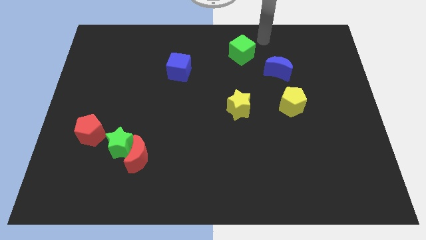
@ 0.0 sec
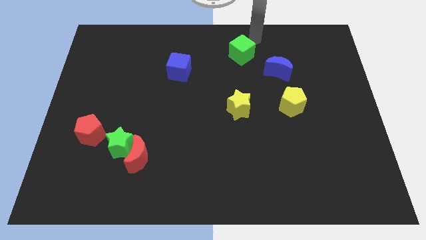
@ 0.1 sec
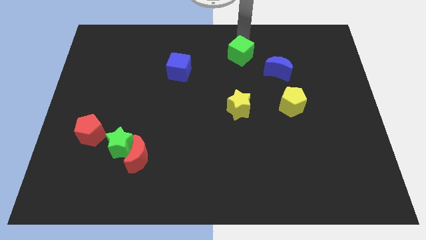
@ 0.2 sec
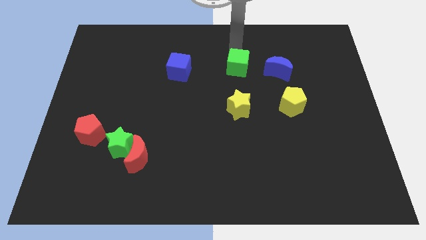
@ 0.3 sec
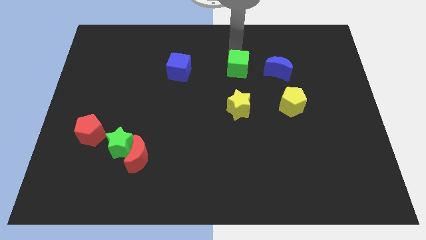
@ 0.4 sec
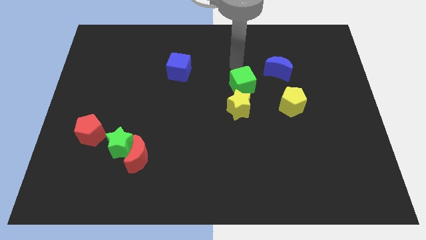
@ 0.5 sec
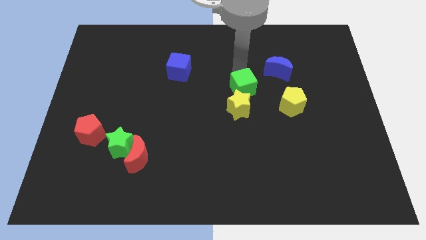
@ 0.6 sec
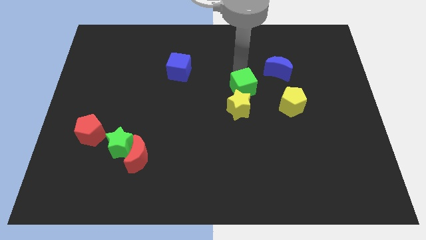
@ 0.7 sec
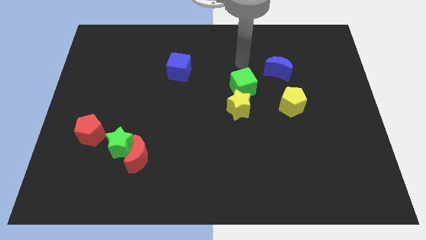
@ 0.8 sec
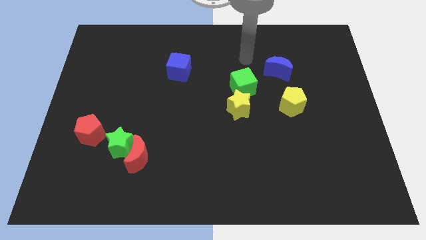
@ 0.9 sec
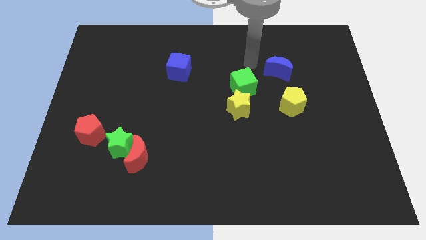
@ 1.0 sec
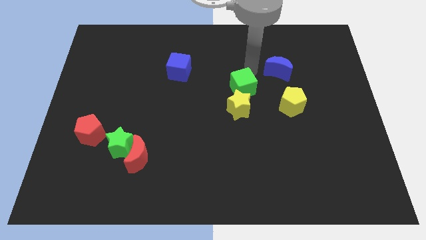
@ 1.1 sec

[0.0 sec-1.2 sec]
move the green cube towards the top side of the green star

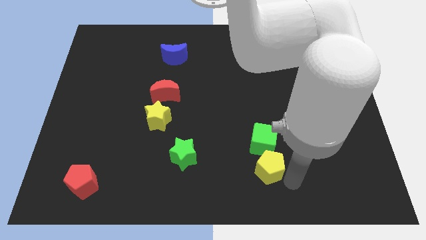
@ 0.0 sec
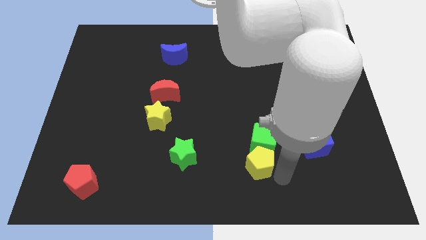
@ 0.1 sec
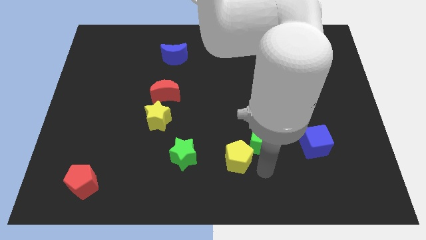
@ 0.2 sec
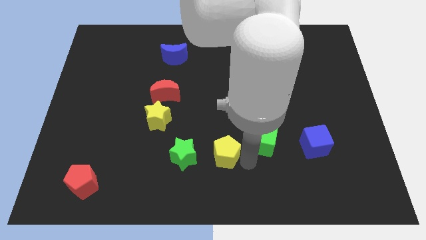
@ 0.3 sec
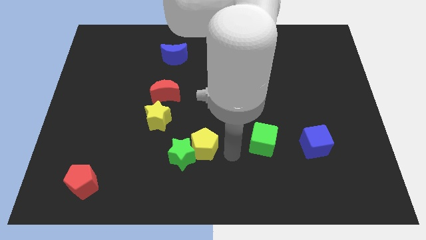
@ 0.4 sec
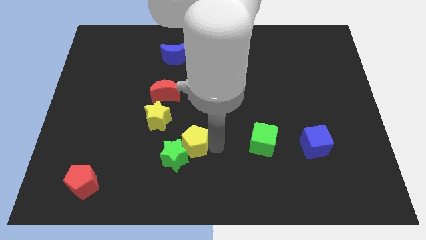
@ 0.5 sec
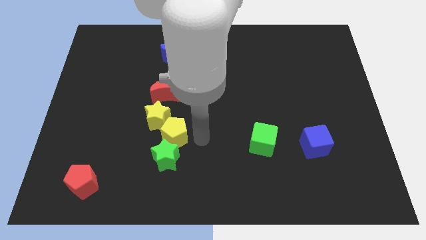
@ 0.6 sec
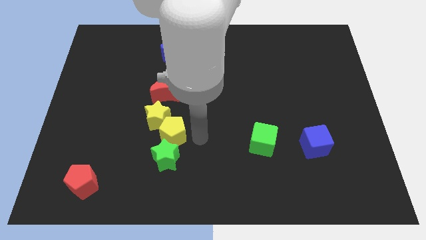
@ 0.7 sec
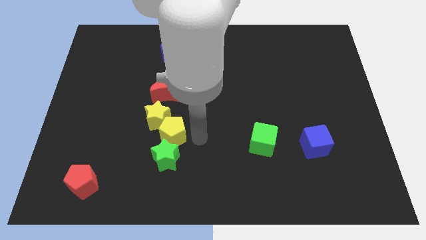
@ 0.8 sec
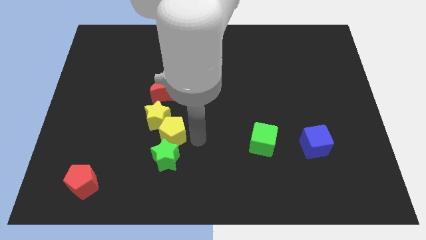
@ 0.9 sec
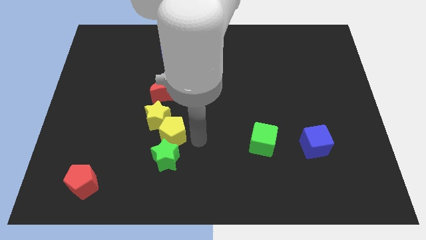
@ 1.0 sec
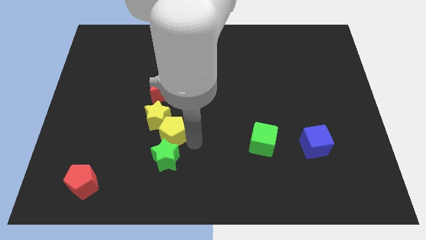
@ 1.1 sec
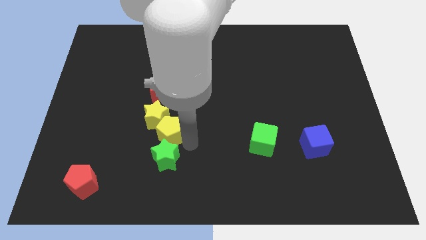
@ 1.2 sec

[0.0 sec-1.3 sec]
push the yellow pentagon into yellow star

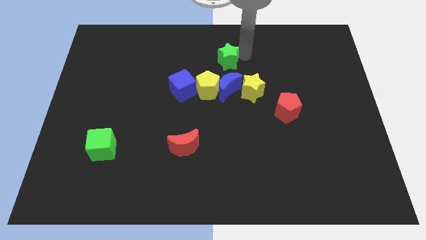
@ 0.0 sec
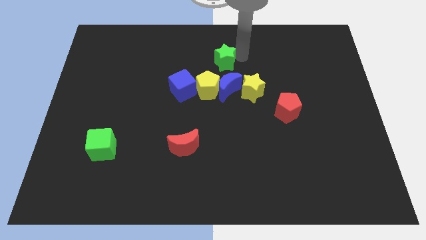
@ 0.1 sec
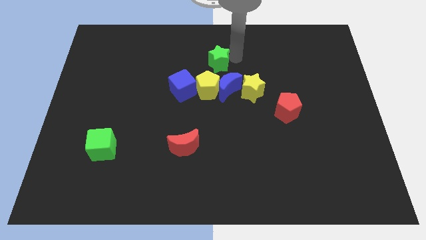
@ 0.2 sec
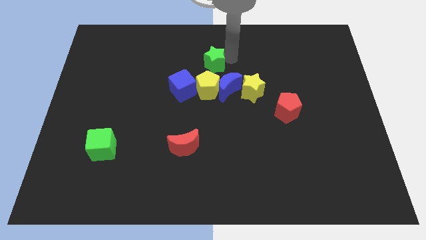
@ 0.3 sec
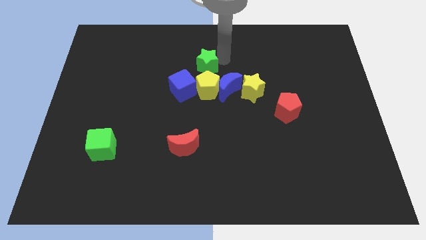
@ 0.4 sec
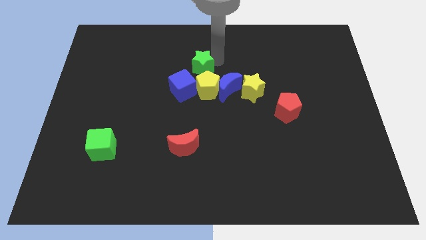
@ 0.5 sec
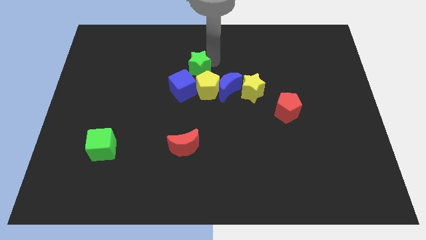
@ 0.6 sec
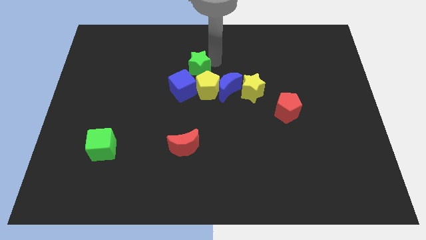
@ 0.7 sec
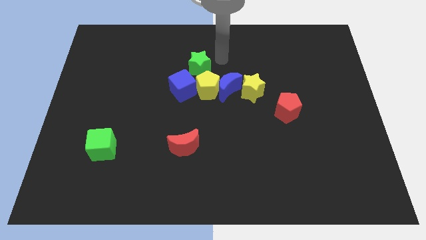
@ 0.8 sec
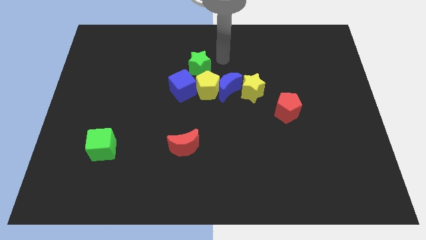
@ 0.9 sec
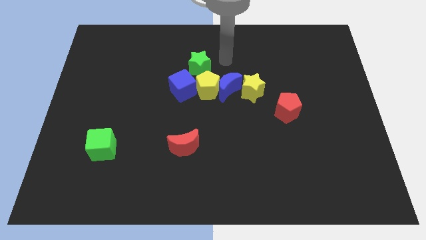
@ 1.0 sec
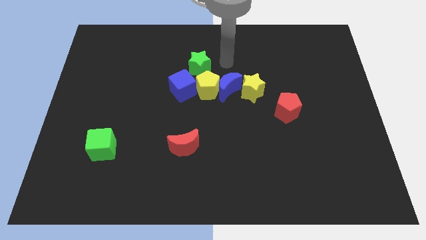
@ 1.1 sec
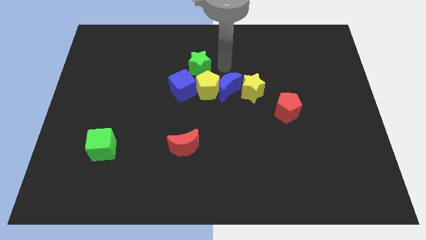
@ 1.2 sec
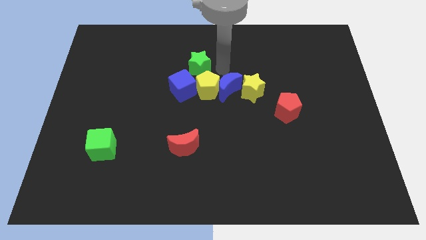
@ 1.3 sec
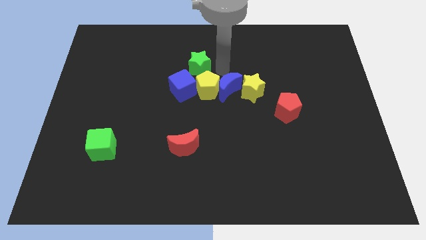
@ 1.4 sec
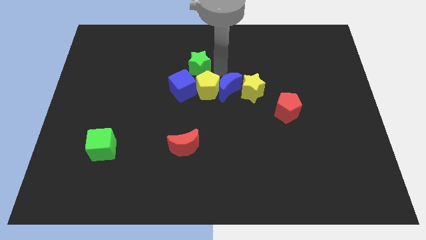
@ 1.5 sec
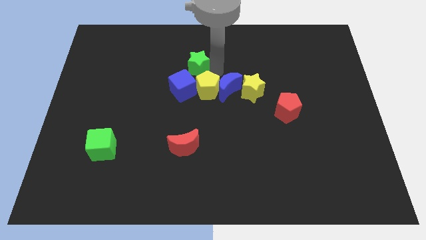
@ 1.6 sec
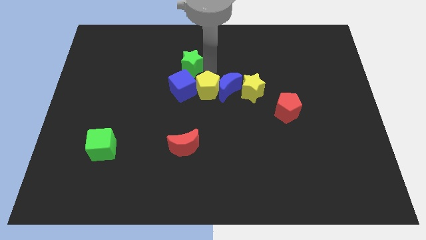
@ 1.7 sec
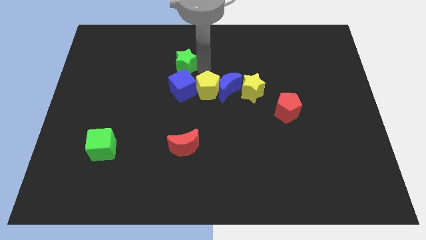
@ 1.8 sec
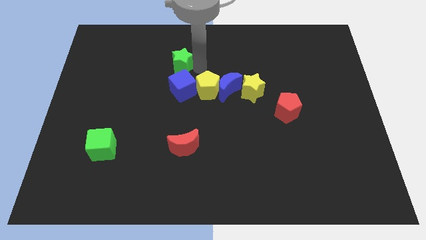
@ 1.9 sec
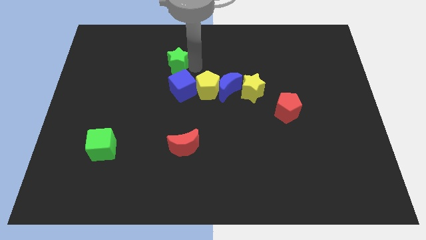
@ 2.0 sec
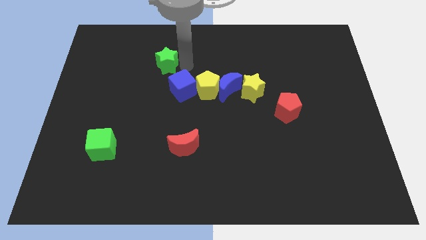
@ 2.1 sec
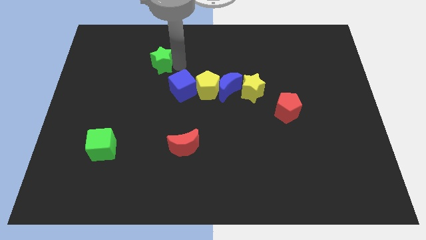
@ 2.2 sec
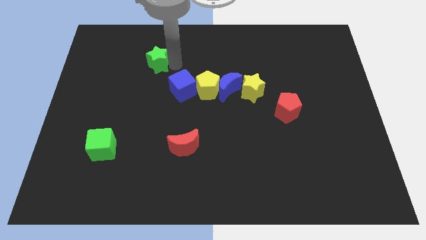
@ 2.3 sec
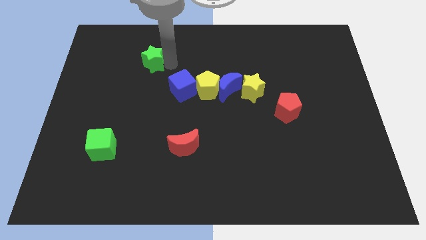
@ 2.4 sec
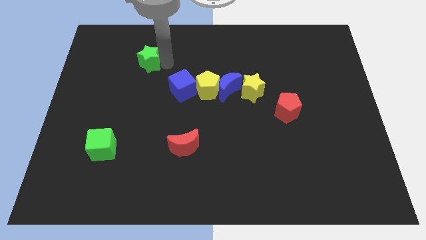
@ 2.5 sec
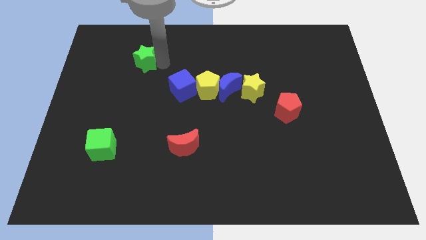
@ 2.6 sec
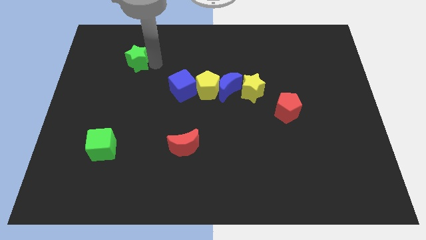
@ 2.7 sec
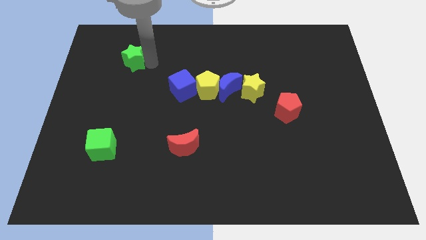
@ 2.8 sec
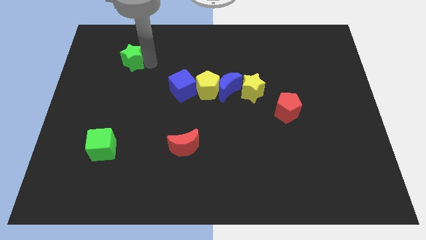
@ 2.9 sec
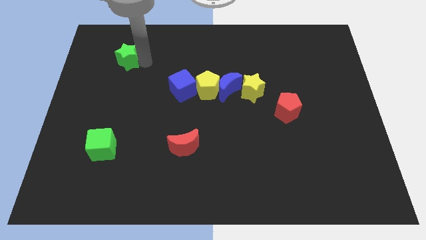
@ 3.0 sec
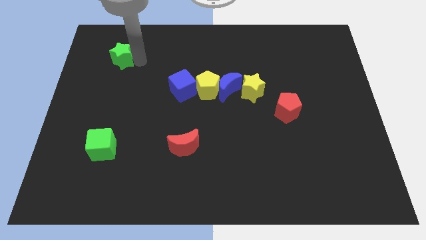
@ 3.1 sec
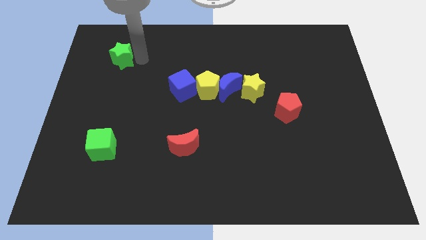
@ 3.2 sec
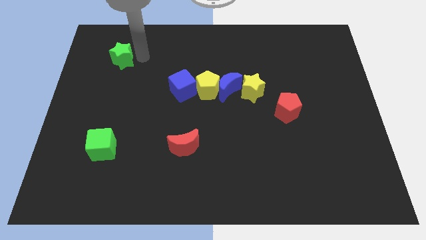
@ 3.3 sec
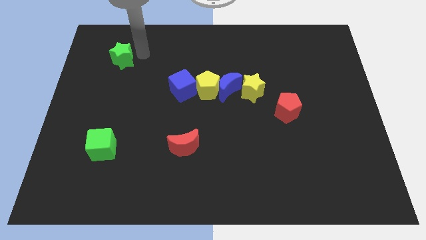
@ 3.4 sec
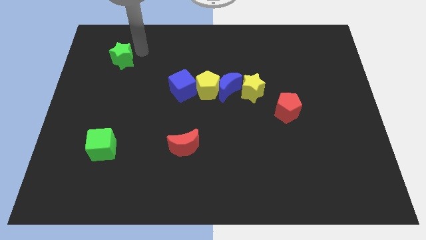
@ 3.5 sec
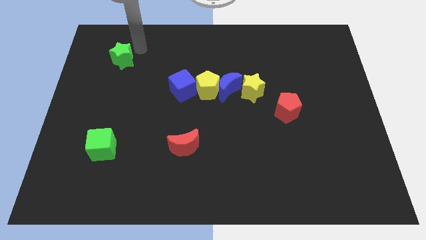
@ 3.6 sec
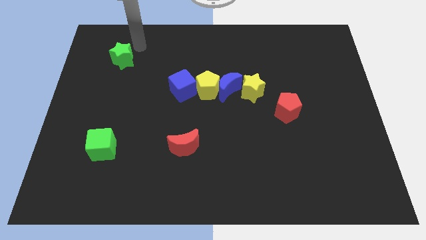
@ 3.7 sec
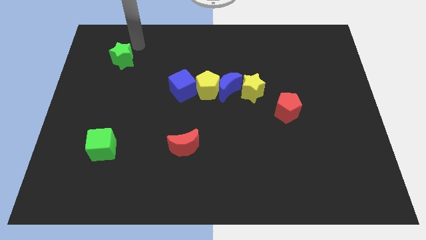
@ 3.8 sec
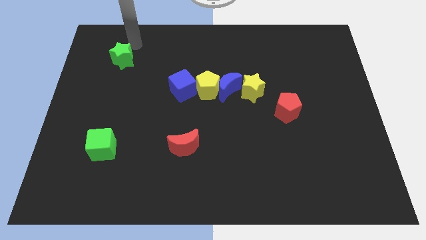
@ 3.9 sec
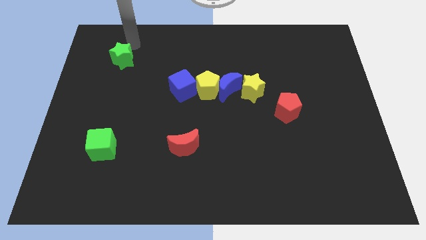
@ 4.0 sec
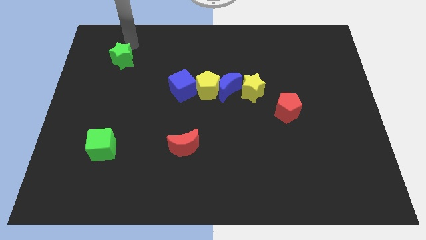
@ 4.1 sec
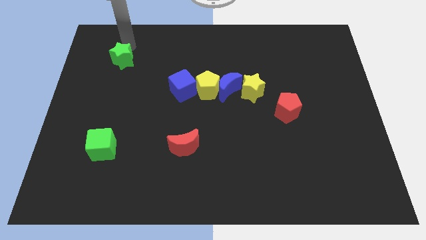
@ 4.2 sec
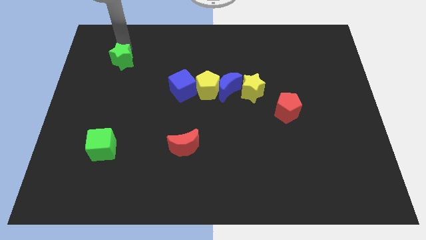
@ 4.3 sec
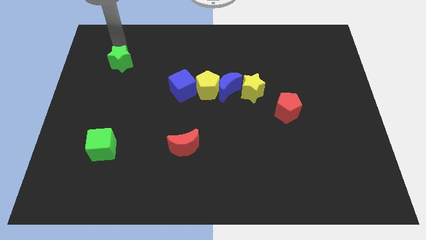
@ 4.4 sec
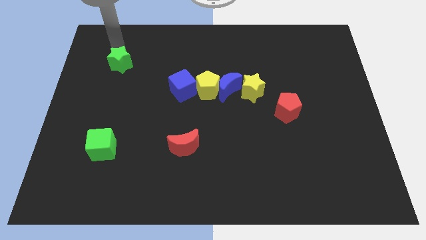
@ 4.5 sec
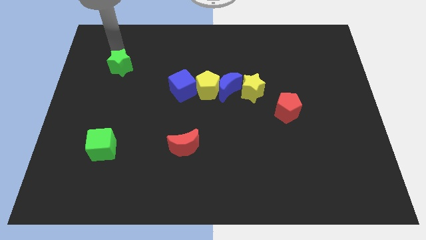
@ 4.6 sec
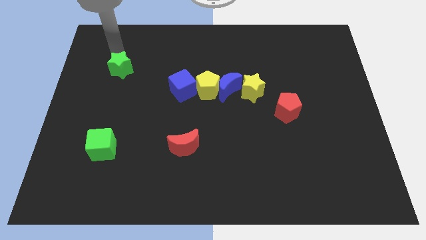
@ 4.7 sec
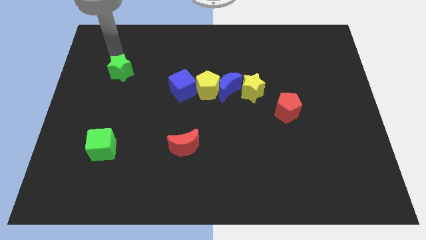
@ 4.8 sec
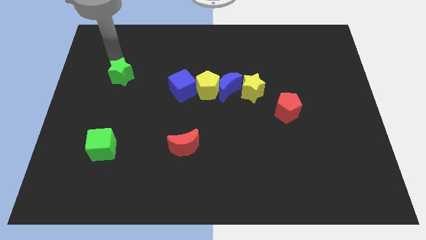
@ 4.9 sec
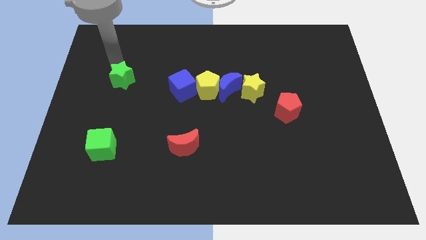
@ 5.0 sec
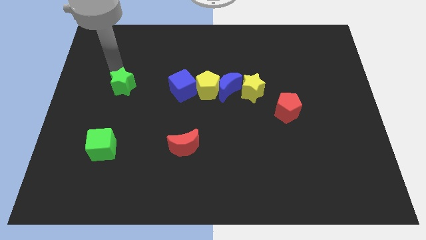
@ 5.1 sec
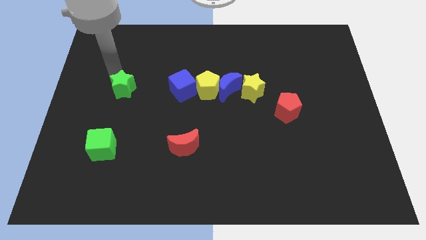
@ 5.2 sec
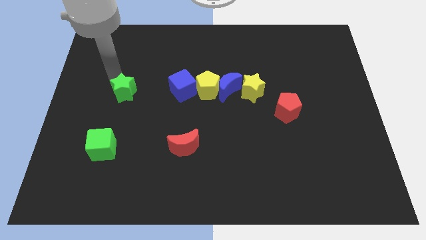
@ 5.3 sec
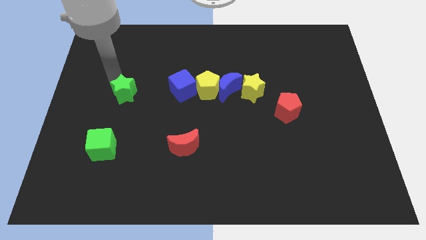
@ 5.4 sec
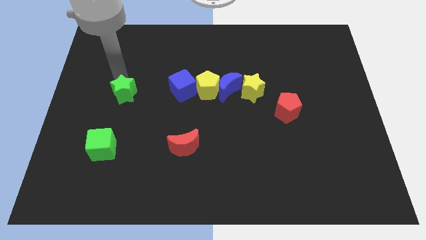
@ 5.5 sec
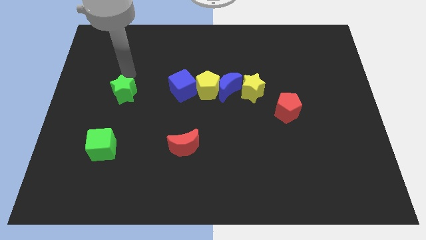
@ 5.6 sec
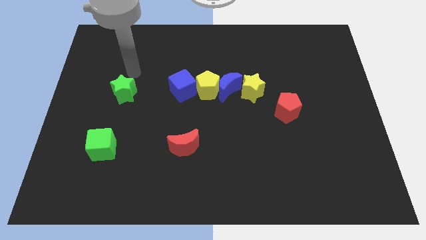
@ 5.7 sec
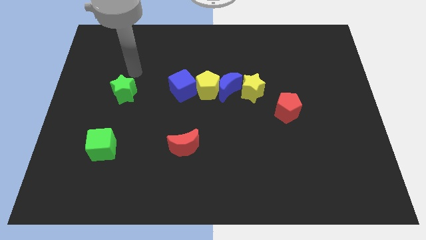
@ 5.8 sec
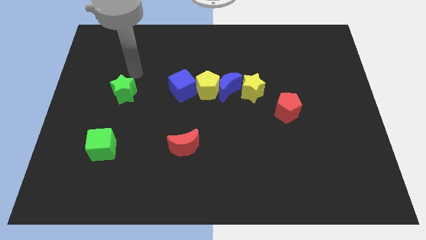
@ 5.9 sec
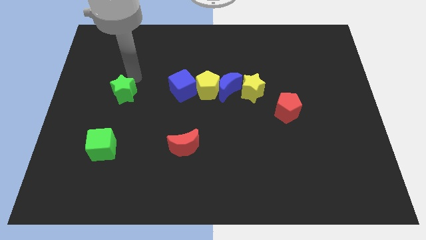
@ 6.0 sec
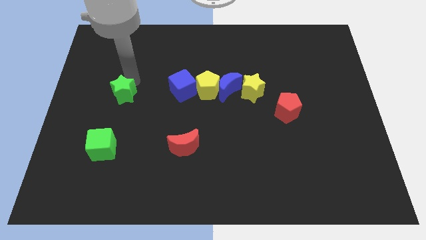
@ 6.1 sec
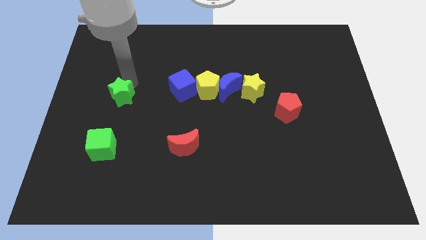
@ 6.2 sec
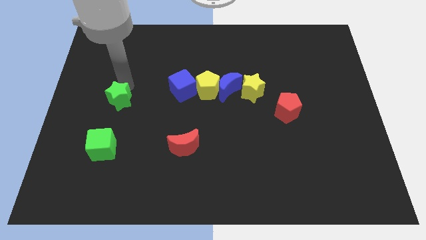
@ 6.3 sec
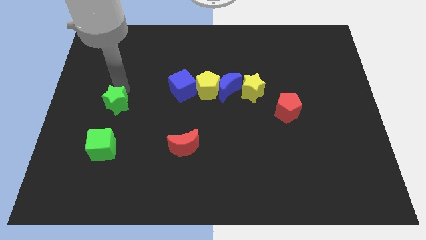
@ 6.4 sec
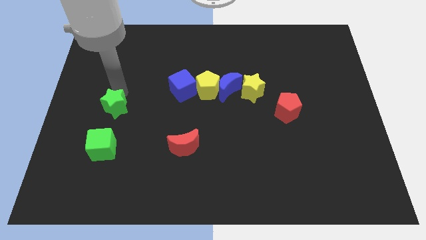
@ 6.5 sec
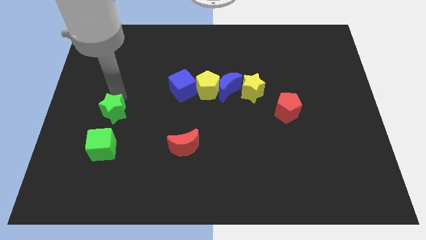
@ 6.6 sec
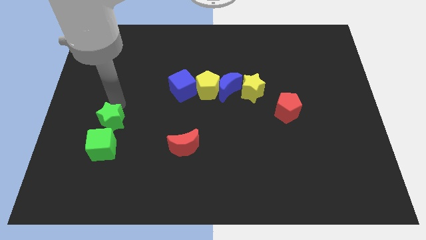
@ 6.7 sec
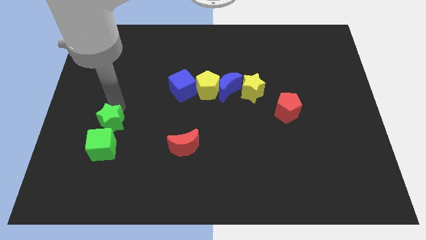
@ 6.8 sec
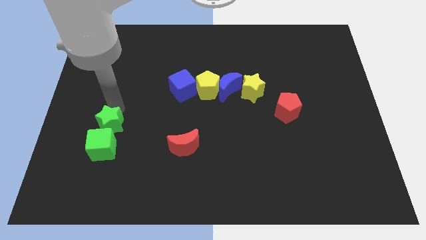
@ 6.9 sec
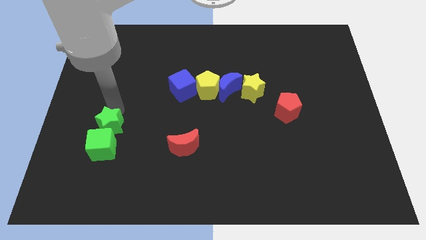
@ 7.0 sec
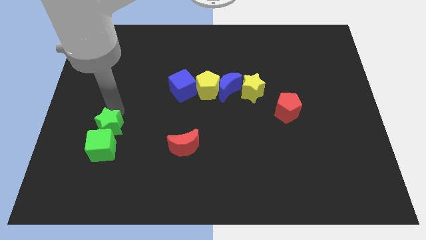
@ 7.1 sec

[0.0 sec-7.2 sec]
push the green star to the above of green cube
